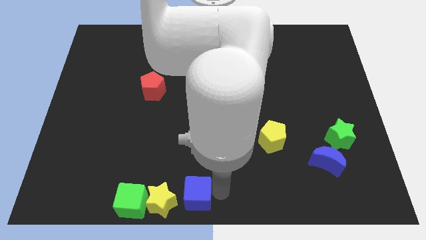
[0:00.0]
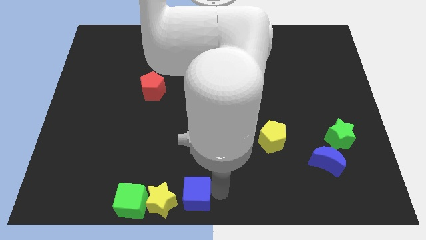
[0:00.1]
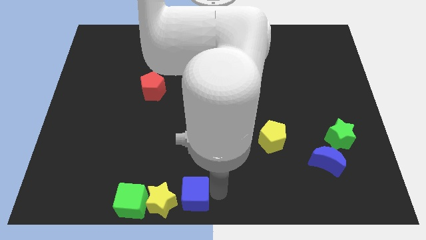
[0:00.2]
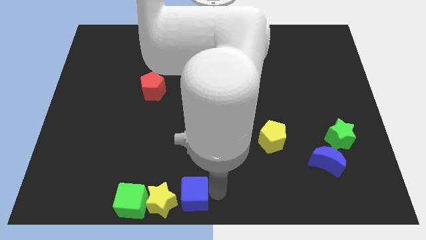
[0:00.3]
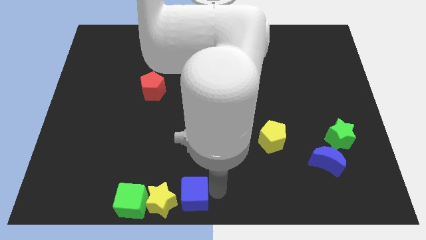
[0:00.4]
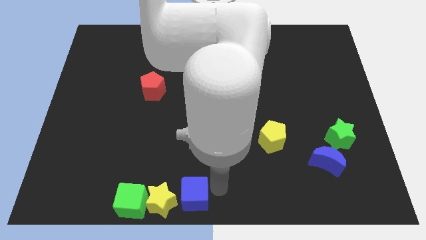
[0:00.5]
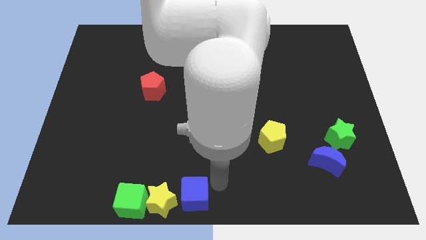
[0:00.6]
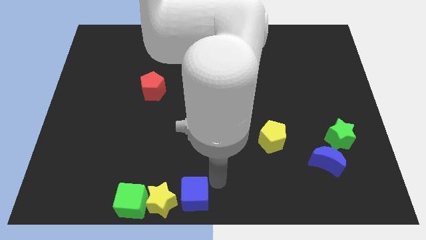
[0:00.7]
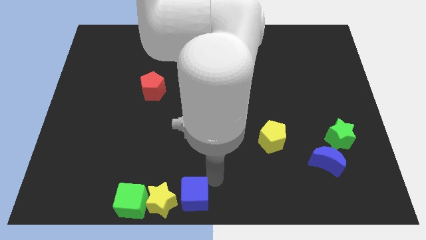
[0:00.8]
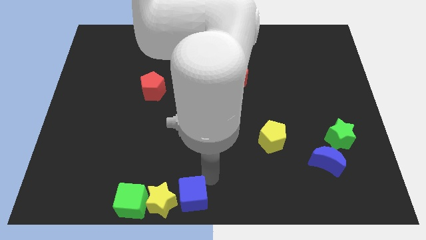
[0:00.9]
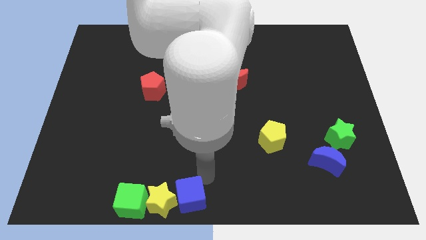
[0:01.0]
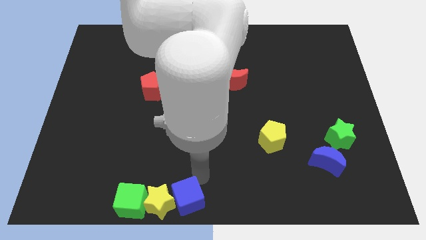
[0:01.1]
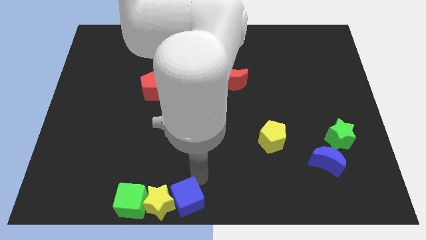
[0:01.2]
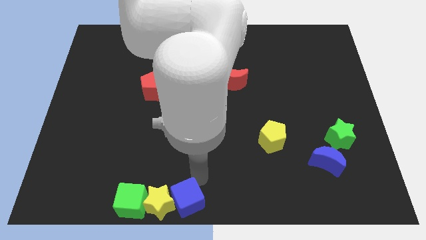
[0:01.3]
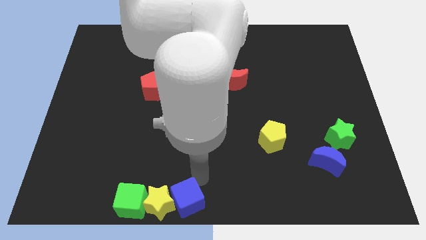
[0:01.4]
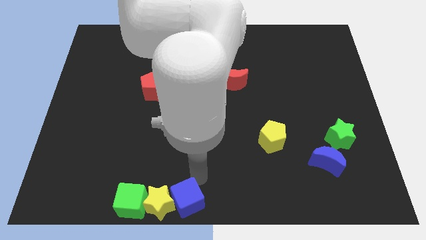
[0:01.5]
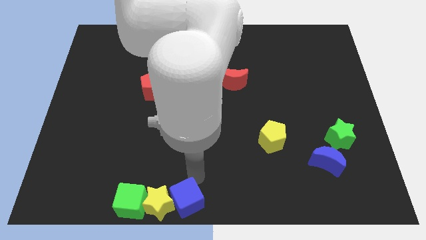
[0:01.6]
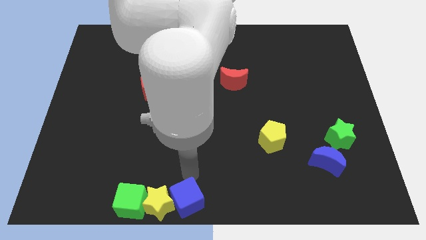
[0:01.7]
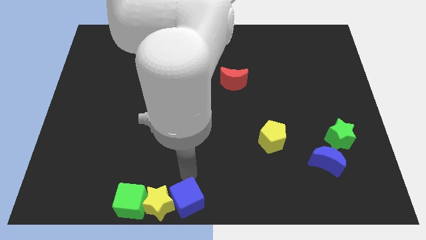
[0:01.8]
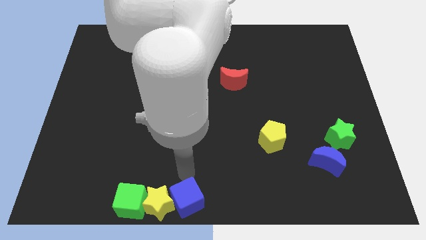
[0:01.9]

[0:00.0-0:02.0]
place the blue cube to the right of the yellow star

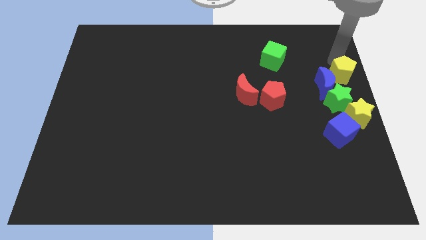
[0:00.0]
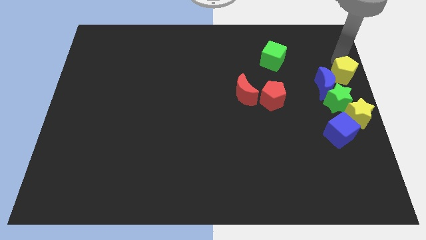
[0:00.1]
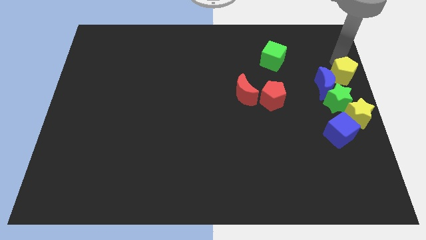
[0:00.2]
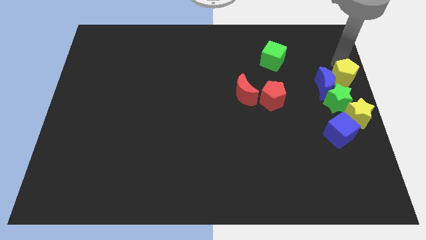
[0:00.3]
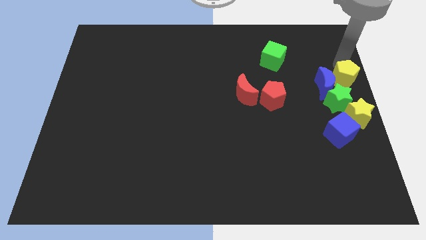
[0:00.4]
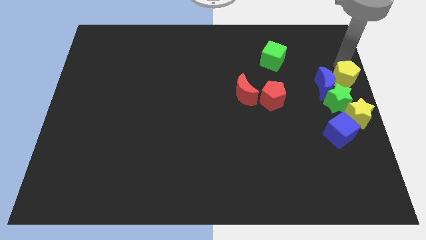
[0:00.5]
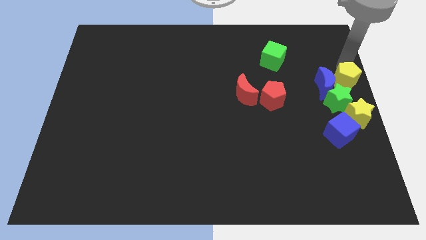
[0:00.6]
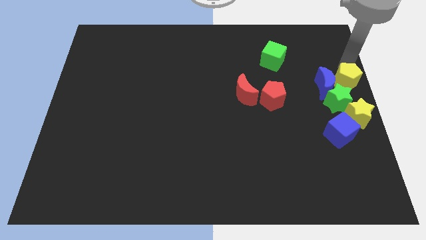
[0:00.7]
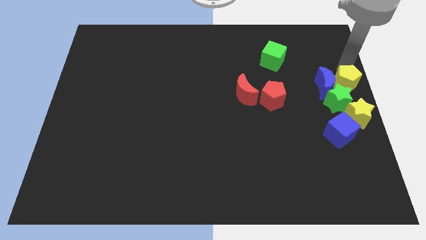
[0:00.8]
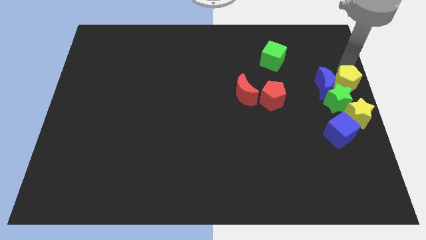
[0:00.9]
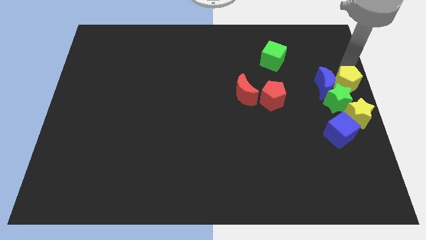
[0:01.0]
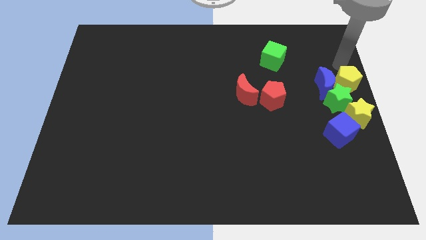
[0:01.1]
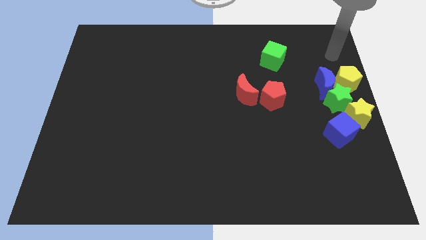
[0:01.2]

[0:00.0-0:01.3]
move the yellow pentagon above the green star

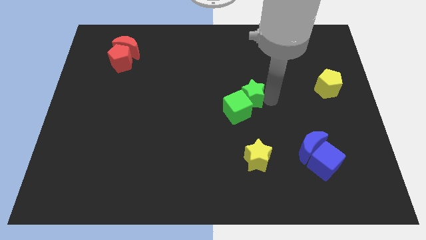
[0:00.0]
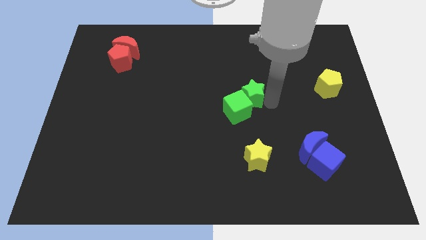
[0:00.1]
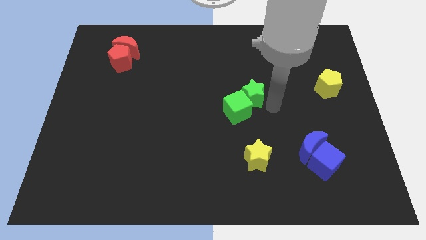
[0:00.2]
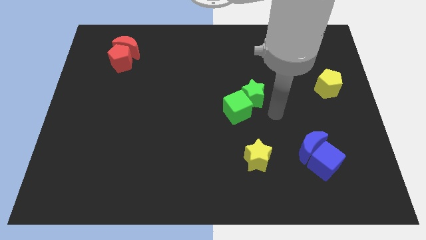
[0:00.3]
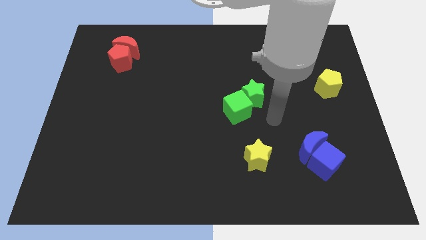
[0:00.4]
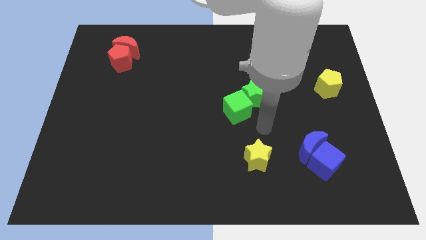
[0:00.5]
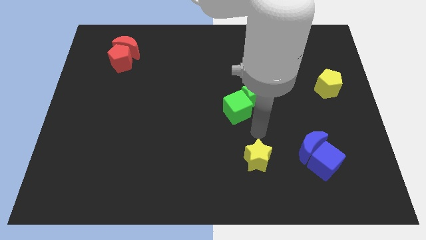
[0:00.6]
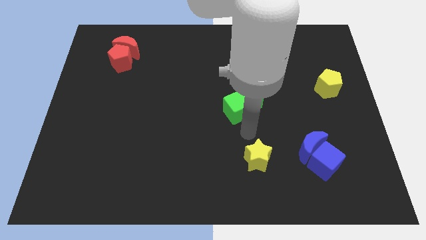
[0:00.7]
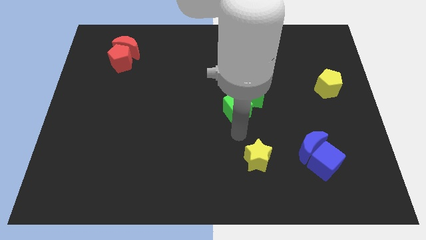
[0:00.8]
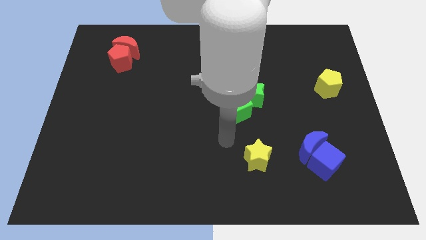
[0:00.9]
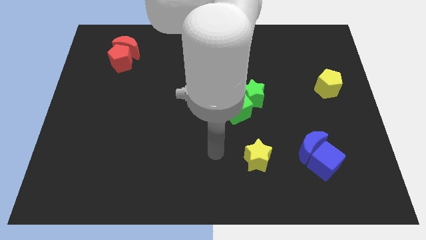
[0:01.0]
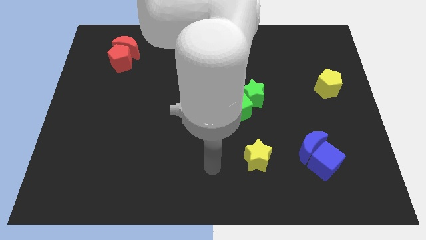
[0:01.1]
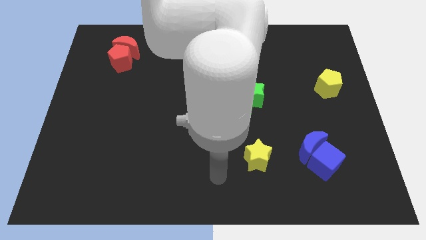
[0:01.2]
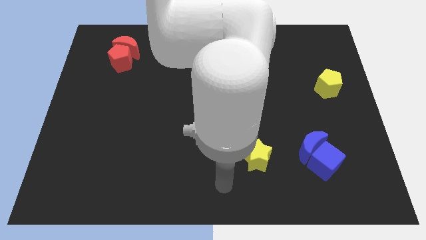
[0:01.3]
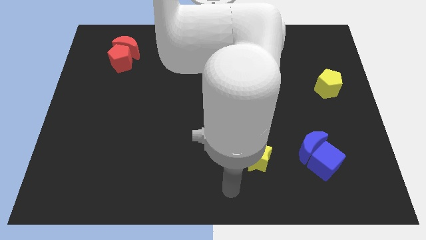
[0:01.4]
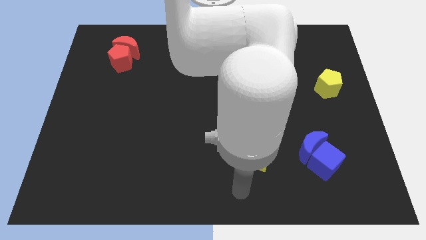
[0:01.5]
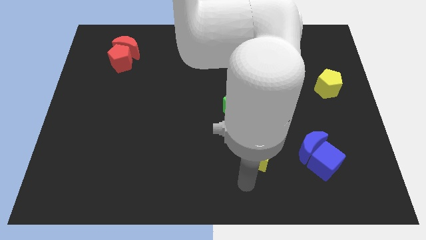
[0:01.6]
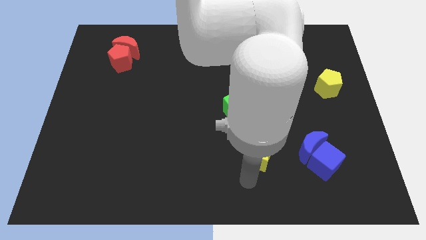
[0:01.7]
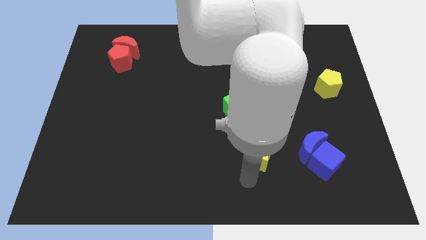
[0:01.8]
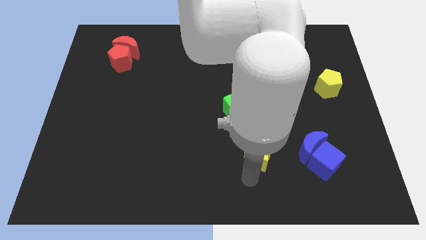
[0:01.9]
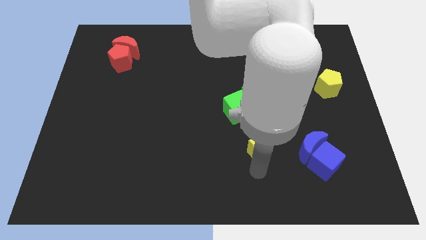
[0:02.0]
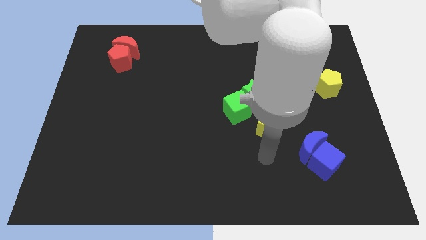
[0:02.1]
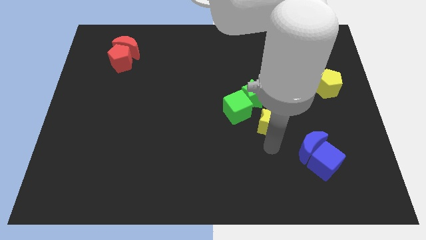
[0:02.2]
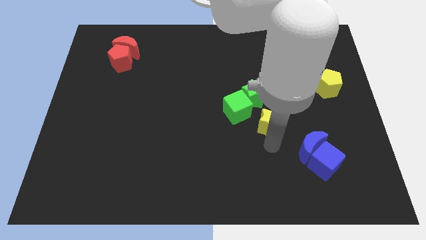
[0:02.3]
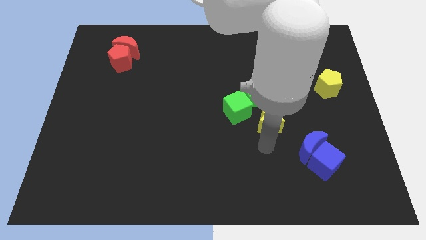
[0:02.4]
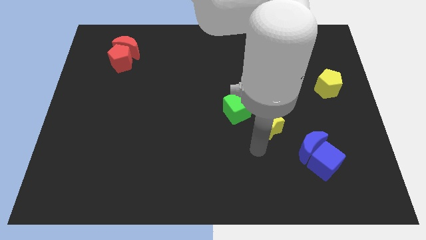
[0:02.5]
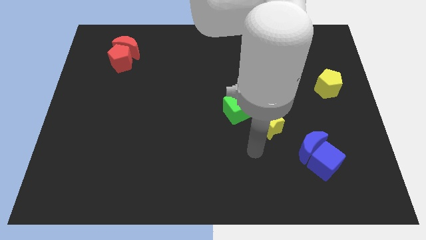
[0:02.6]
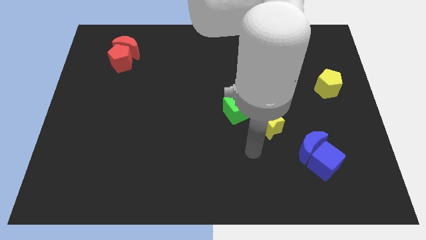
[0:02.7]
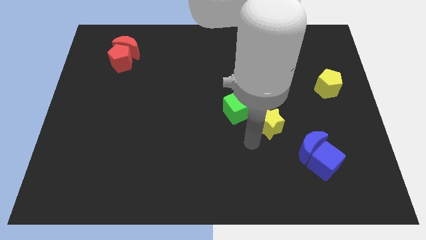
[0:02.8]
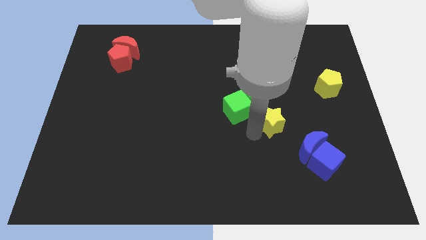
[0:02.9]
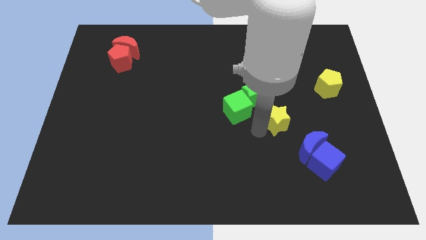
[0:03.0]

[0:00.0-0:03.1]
place the yellow star in between the blue moon and green star

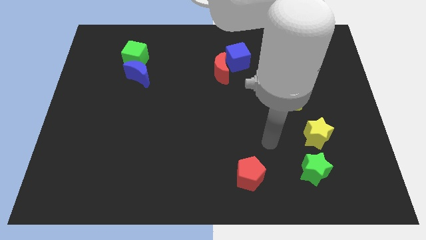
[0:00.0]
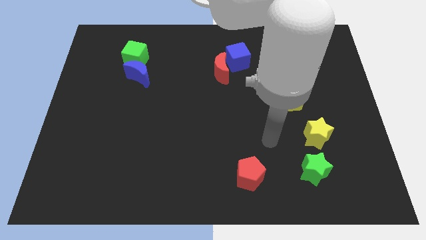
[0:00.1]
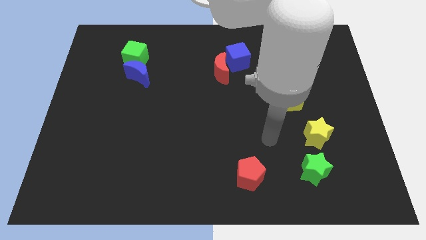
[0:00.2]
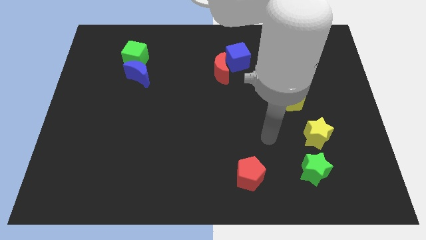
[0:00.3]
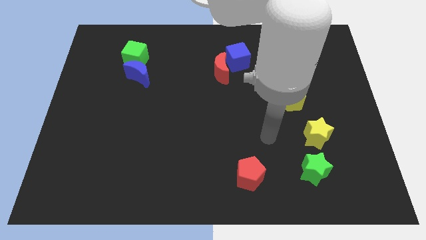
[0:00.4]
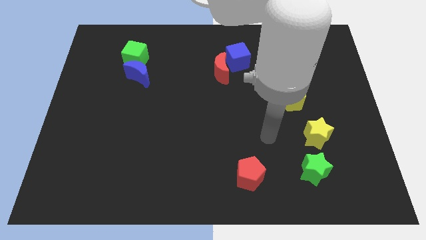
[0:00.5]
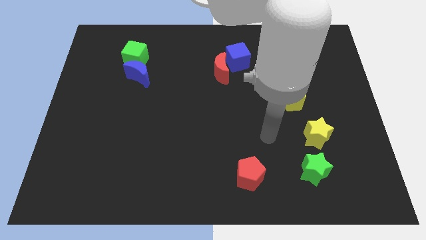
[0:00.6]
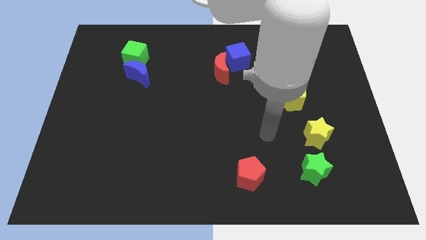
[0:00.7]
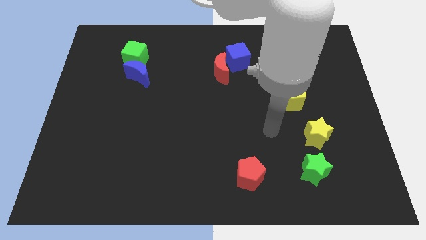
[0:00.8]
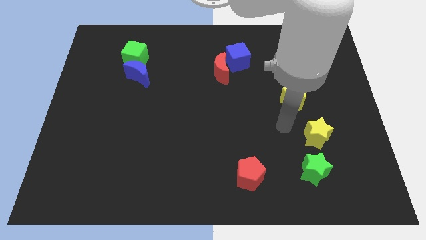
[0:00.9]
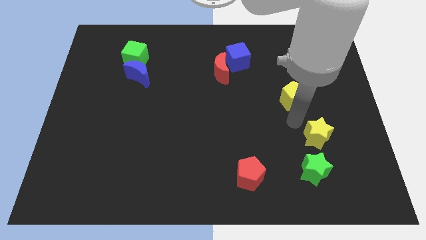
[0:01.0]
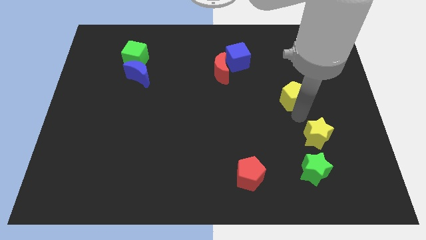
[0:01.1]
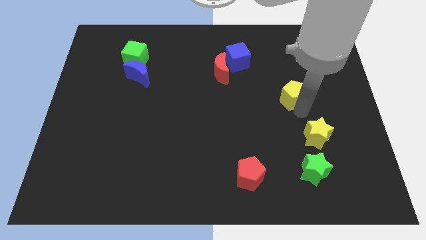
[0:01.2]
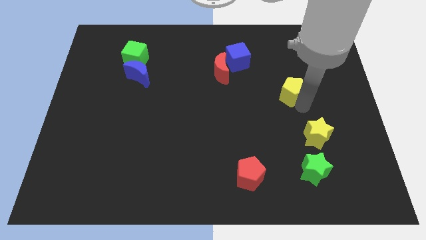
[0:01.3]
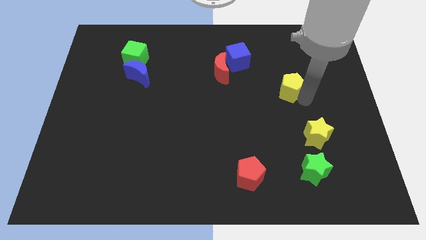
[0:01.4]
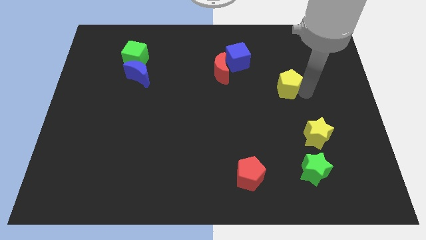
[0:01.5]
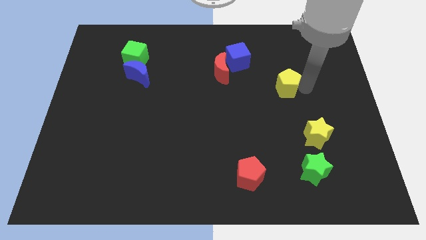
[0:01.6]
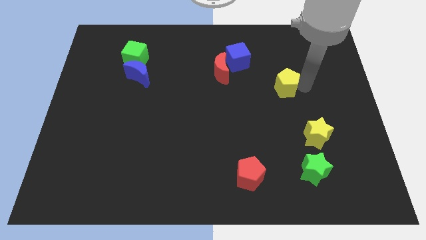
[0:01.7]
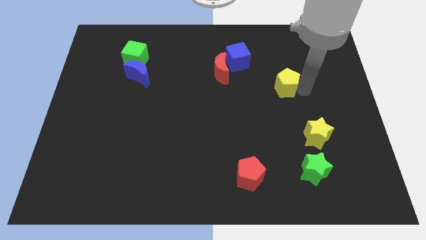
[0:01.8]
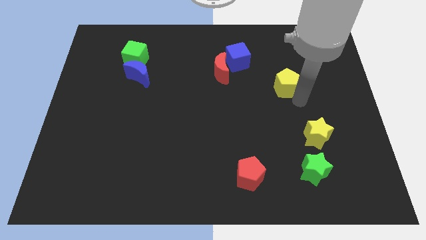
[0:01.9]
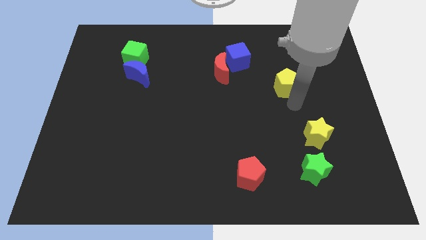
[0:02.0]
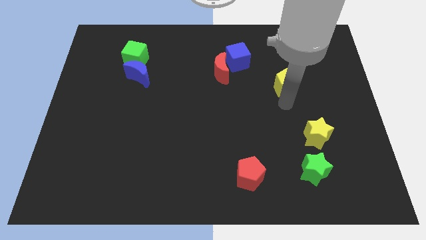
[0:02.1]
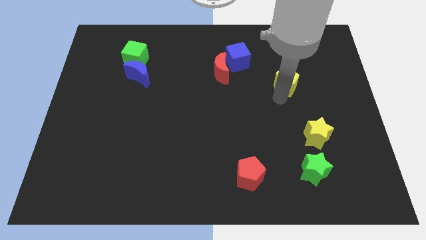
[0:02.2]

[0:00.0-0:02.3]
move the yellow pentagon to the top of the board

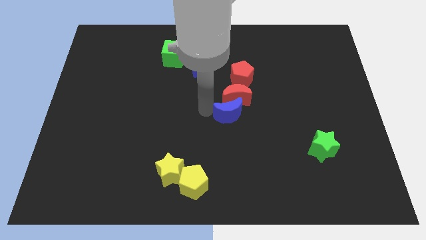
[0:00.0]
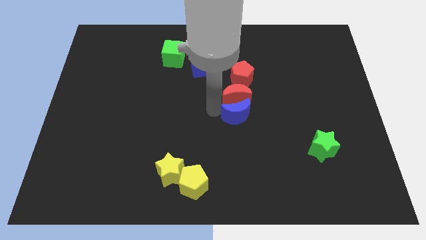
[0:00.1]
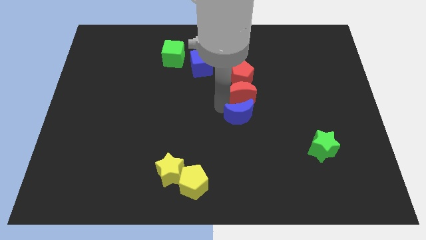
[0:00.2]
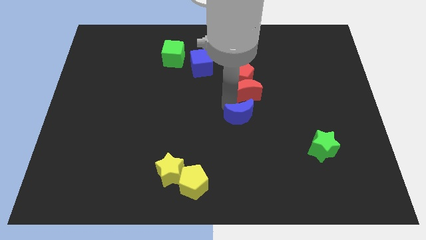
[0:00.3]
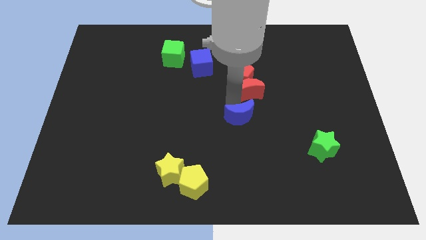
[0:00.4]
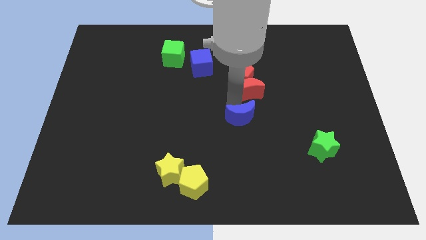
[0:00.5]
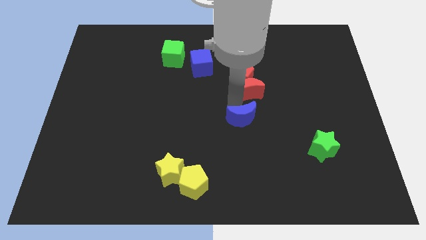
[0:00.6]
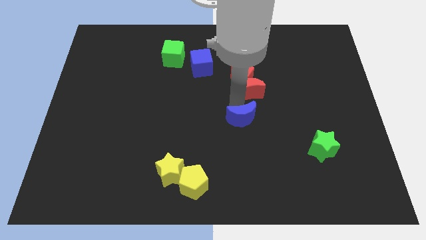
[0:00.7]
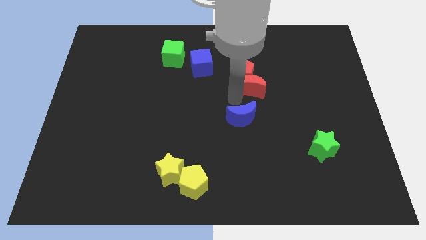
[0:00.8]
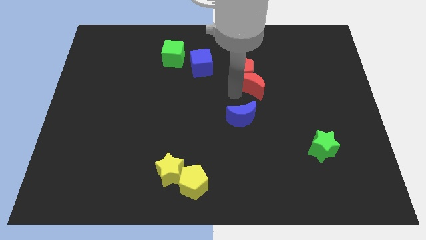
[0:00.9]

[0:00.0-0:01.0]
separate the red crescent from the blue crescent
